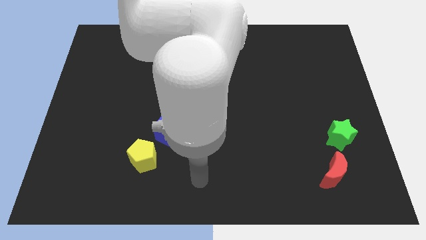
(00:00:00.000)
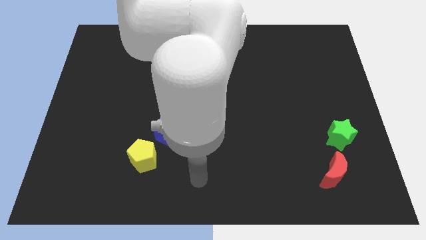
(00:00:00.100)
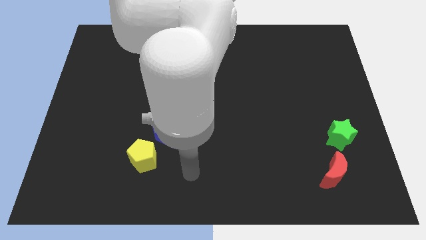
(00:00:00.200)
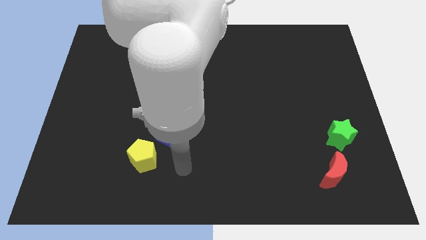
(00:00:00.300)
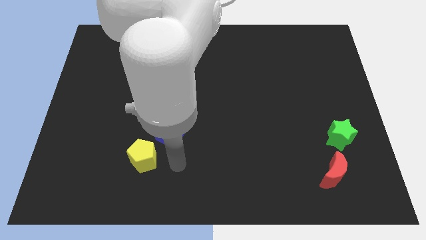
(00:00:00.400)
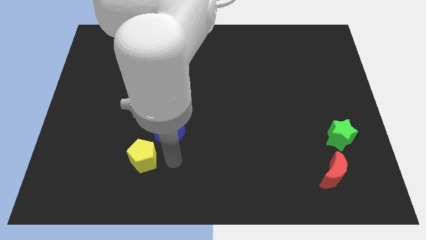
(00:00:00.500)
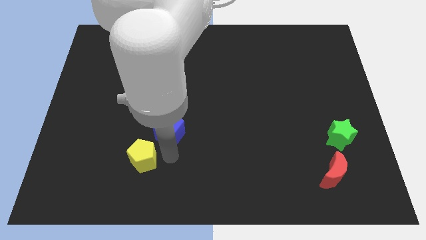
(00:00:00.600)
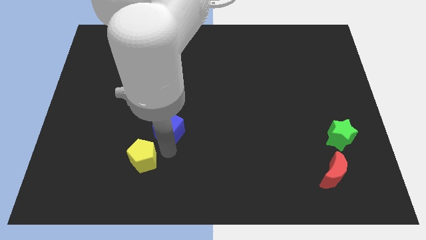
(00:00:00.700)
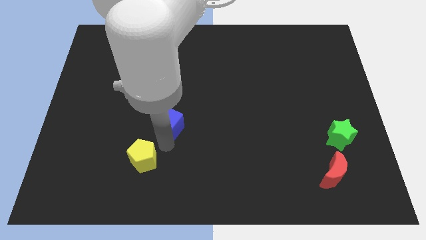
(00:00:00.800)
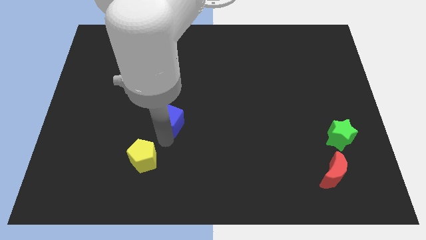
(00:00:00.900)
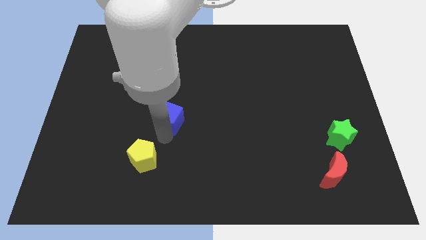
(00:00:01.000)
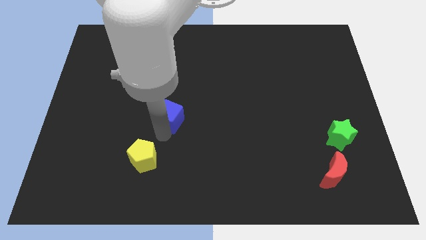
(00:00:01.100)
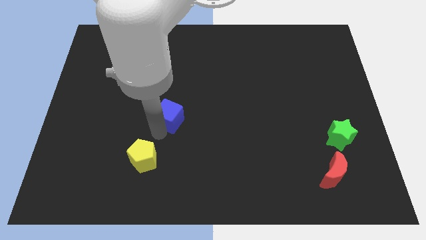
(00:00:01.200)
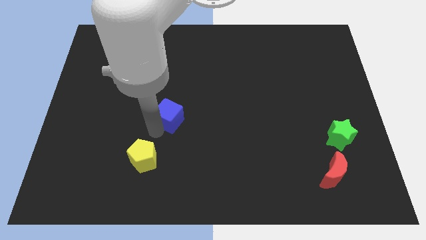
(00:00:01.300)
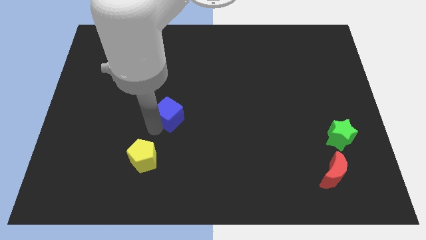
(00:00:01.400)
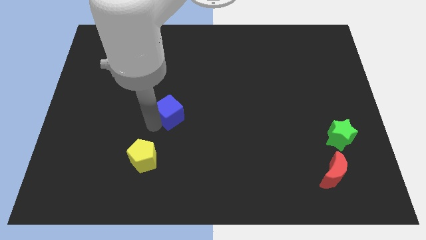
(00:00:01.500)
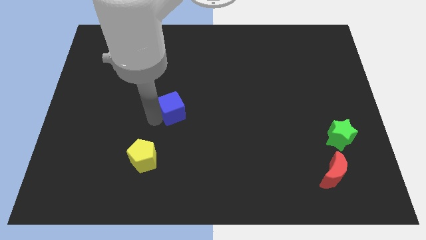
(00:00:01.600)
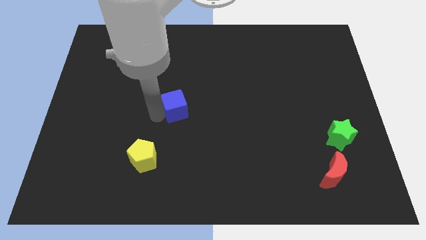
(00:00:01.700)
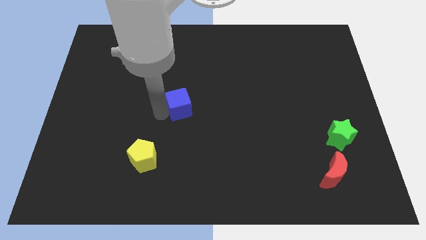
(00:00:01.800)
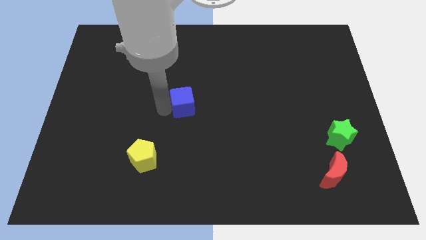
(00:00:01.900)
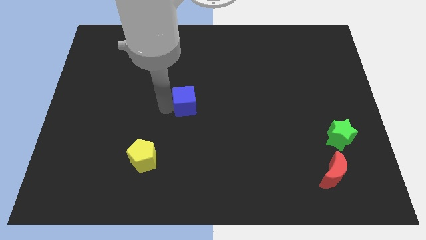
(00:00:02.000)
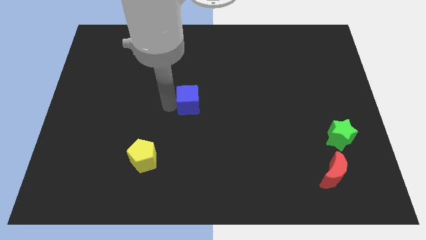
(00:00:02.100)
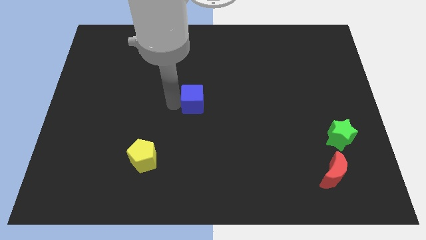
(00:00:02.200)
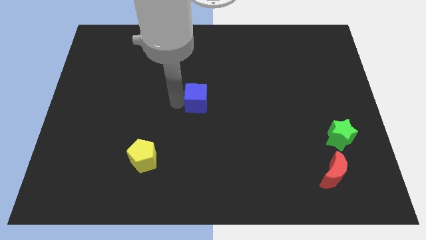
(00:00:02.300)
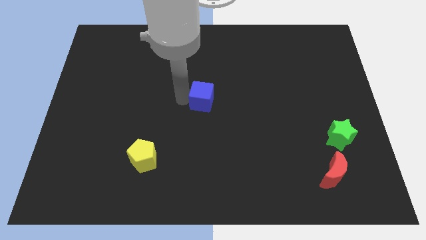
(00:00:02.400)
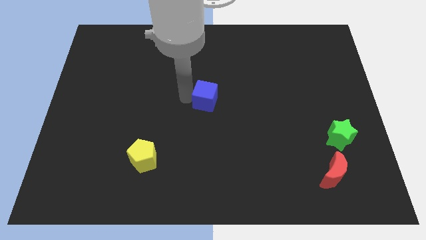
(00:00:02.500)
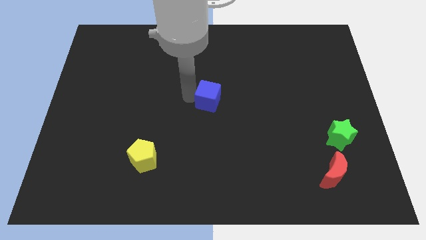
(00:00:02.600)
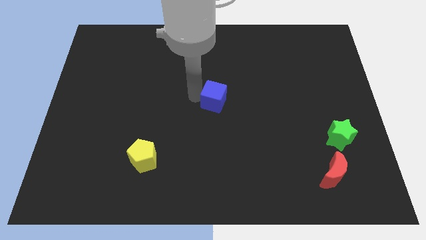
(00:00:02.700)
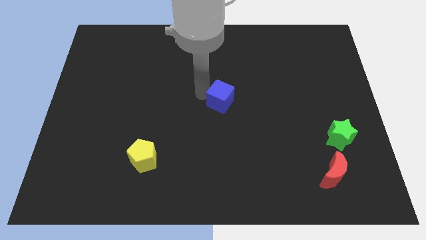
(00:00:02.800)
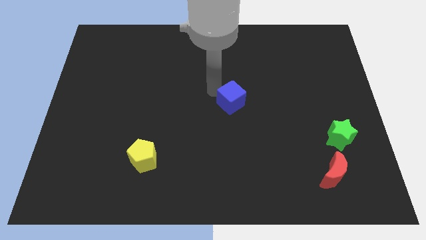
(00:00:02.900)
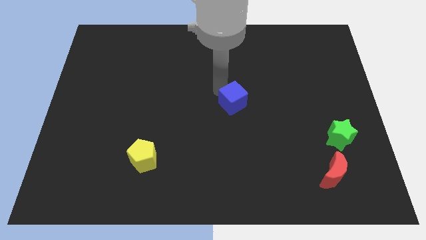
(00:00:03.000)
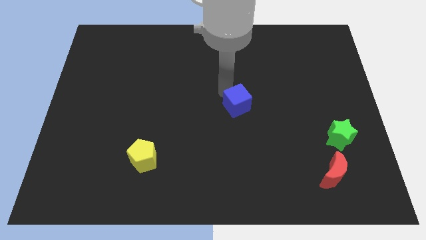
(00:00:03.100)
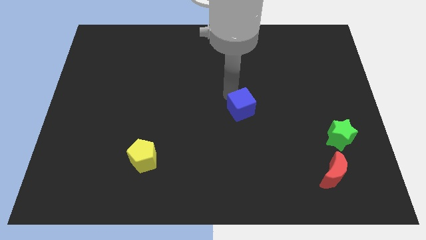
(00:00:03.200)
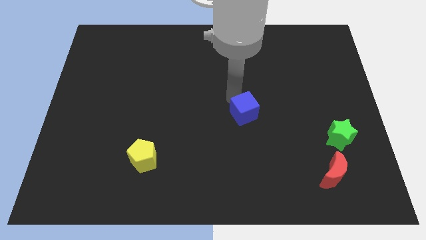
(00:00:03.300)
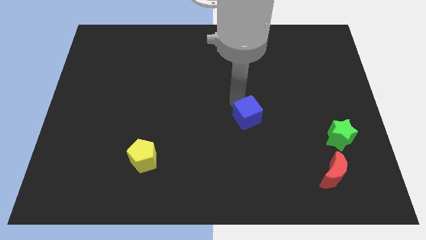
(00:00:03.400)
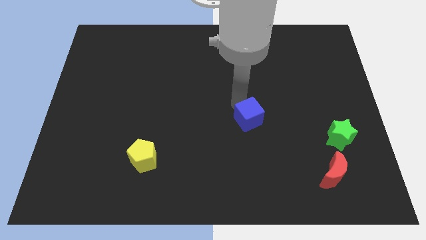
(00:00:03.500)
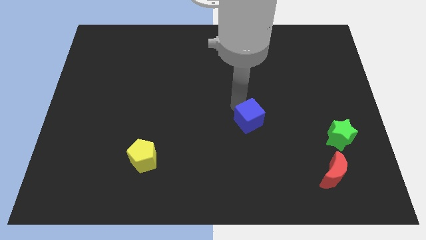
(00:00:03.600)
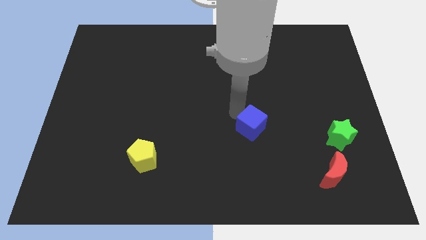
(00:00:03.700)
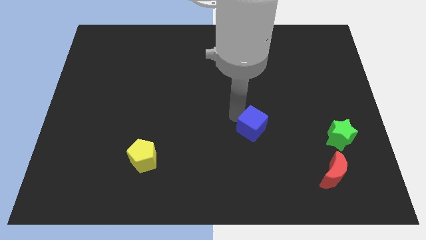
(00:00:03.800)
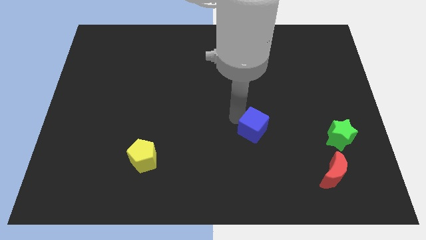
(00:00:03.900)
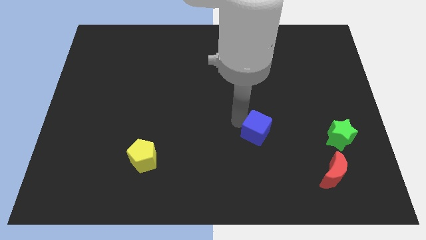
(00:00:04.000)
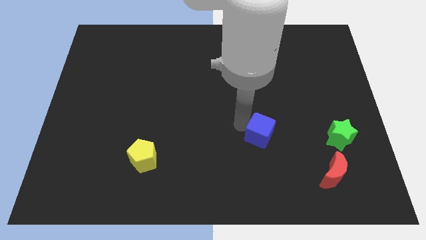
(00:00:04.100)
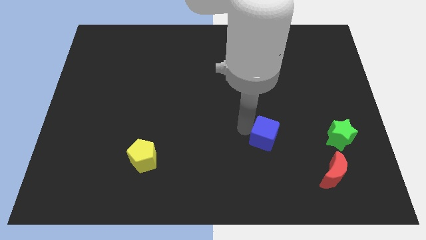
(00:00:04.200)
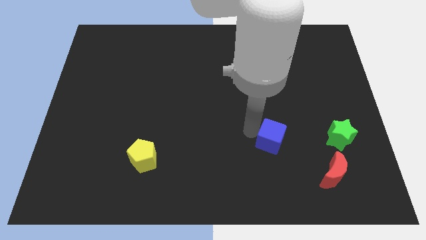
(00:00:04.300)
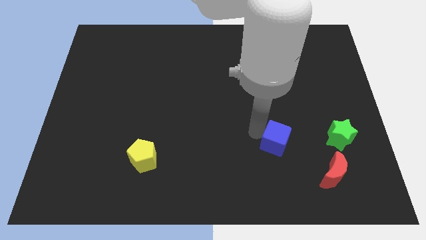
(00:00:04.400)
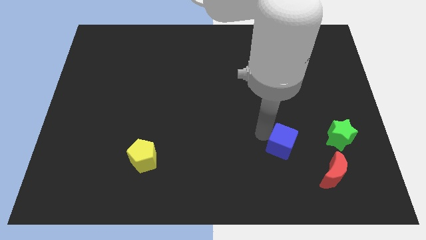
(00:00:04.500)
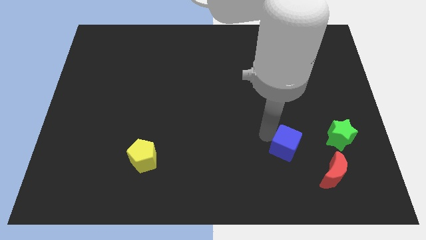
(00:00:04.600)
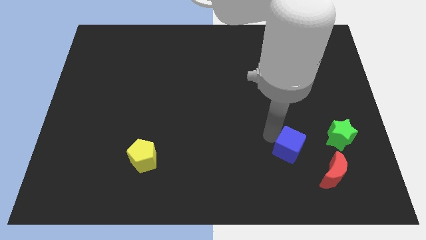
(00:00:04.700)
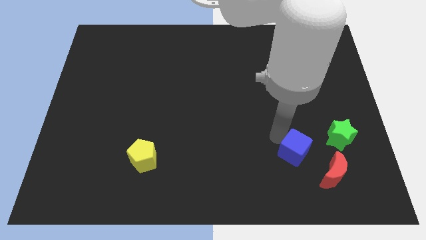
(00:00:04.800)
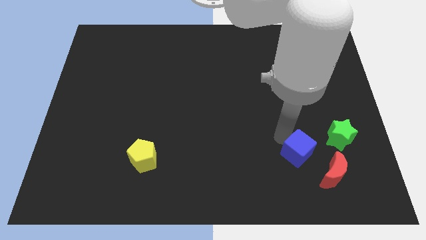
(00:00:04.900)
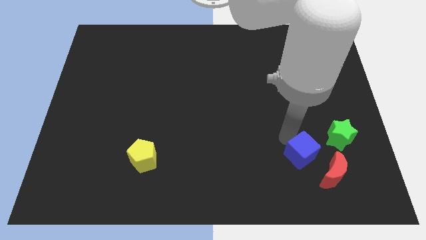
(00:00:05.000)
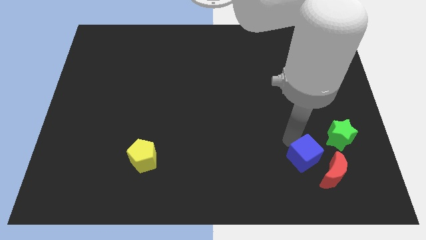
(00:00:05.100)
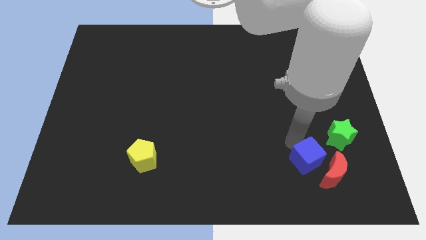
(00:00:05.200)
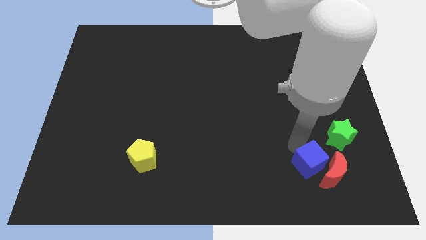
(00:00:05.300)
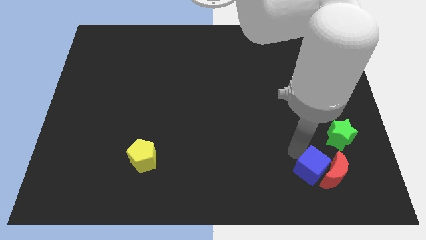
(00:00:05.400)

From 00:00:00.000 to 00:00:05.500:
move the blue cube close to the red moon

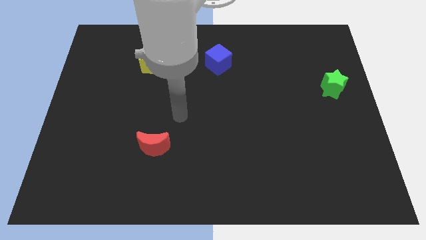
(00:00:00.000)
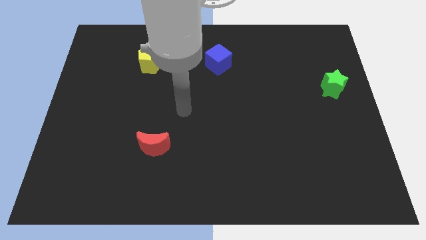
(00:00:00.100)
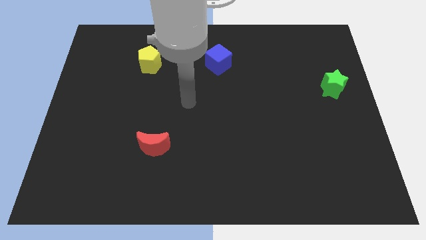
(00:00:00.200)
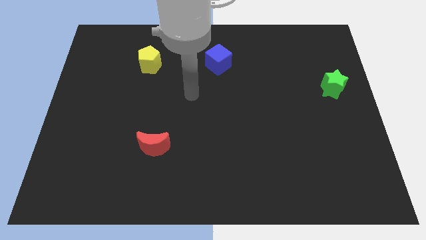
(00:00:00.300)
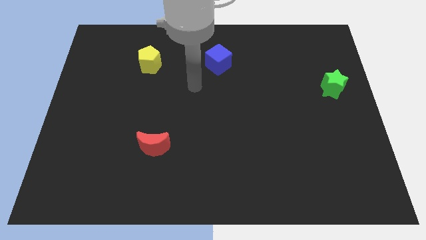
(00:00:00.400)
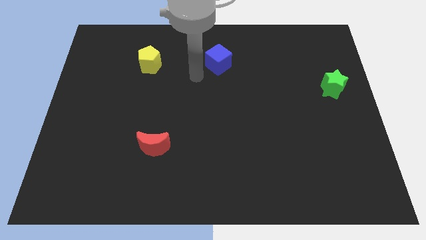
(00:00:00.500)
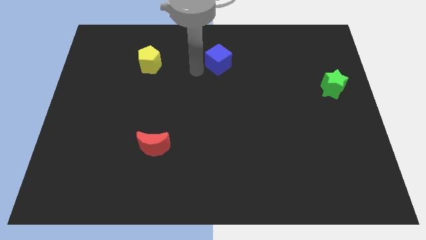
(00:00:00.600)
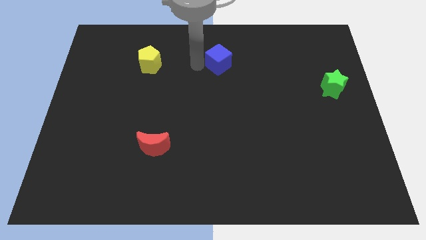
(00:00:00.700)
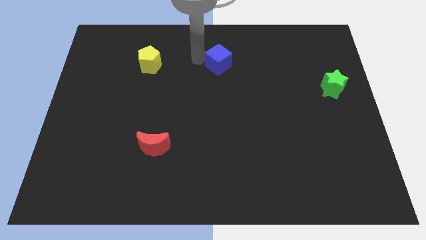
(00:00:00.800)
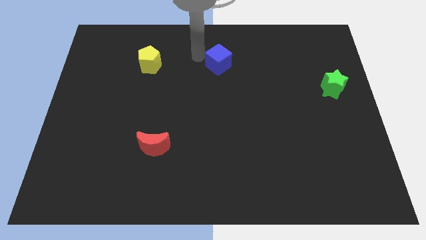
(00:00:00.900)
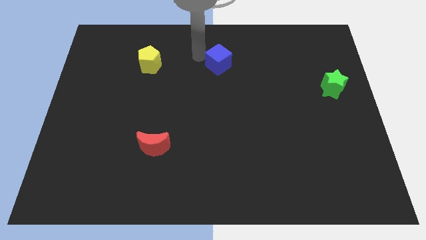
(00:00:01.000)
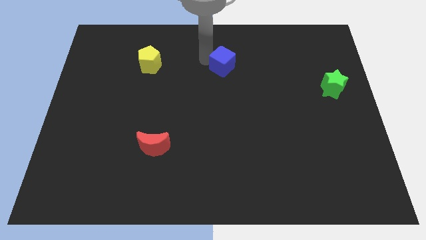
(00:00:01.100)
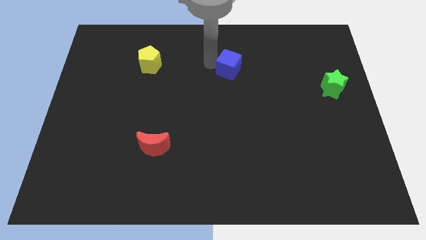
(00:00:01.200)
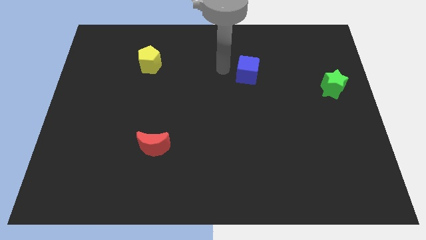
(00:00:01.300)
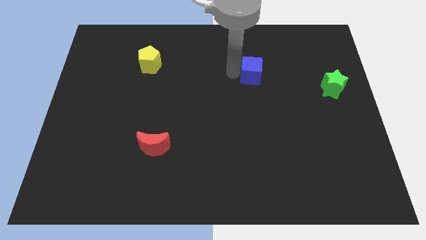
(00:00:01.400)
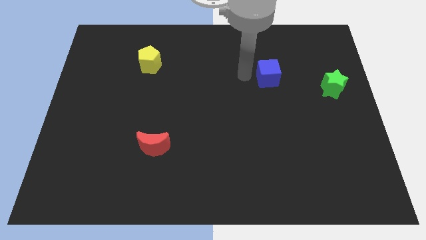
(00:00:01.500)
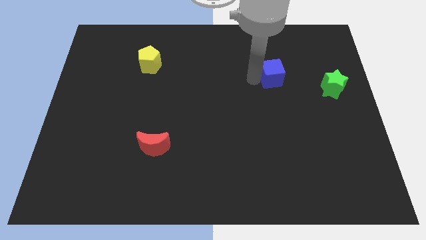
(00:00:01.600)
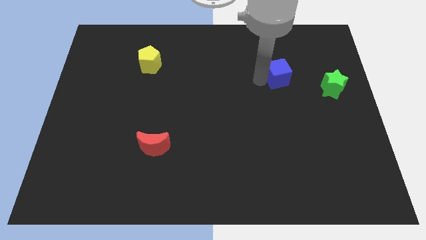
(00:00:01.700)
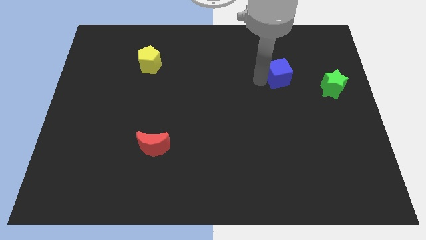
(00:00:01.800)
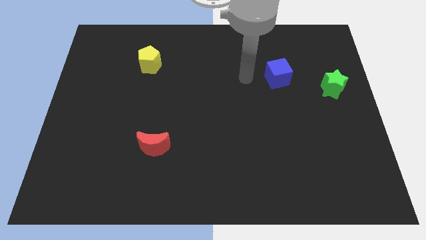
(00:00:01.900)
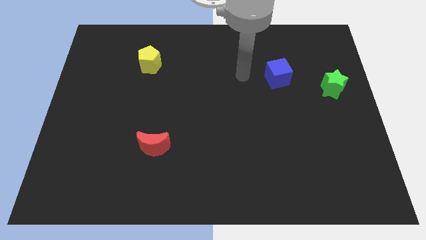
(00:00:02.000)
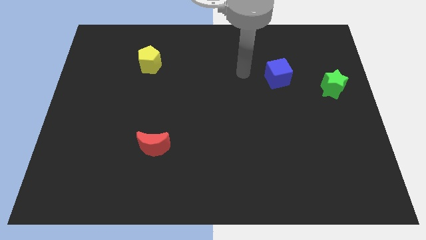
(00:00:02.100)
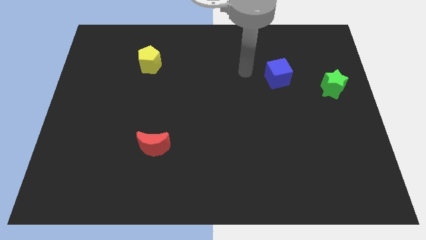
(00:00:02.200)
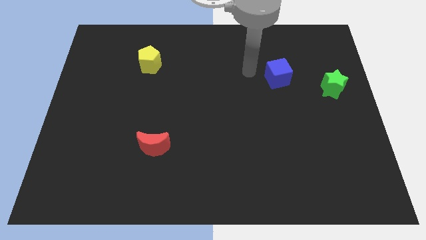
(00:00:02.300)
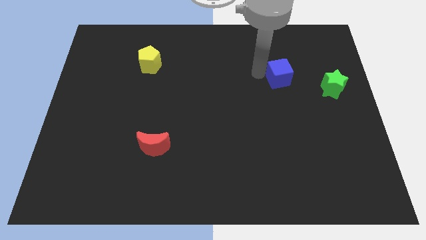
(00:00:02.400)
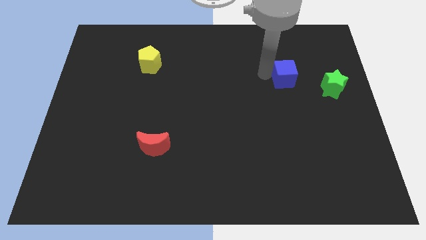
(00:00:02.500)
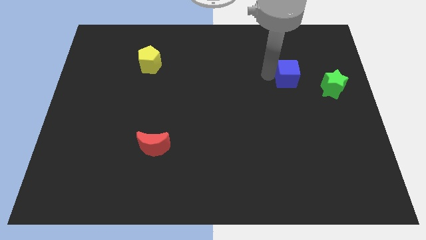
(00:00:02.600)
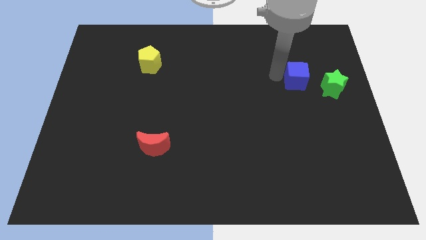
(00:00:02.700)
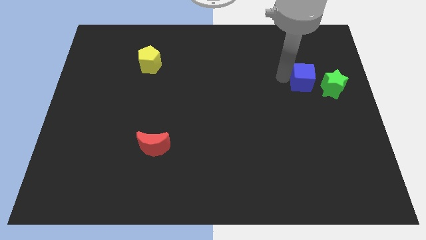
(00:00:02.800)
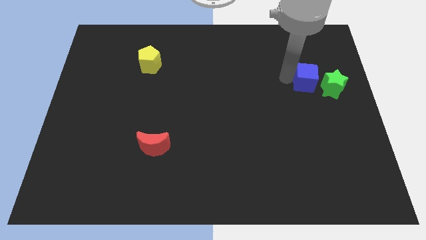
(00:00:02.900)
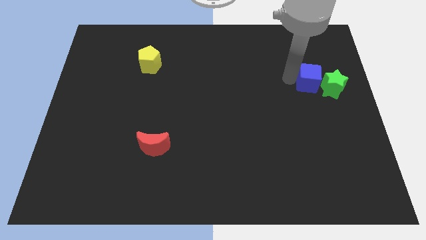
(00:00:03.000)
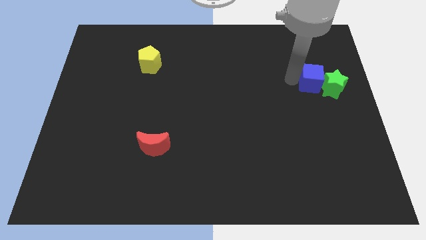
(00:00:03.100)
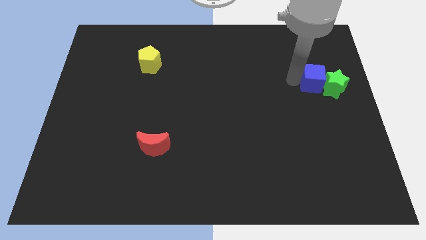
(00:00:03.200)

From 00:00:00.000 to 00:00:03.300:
move the cube to the green star
